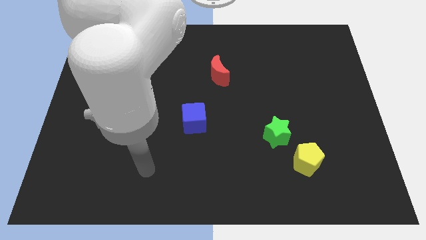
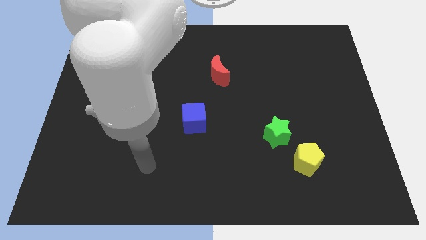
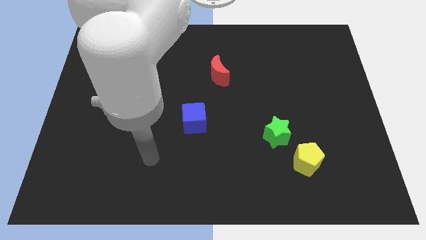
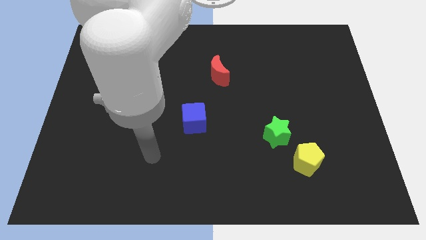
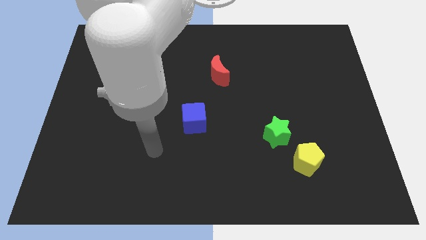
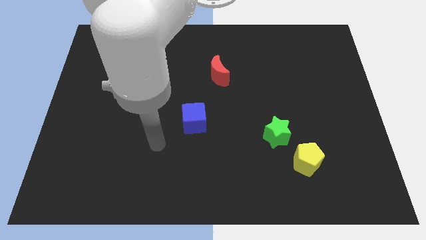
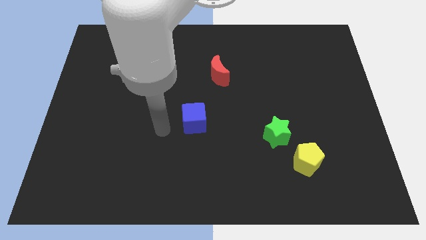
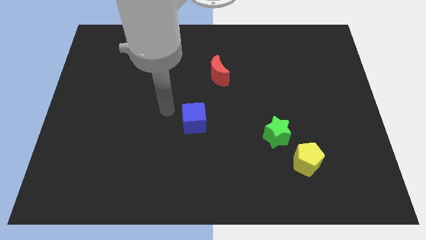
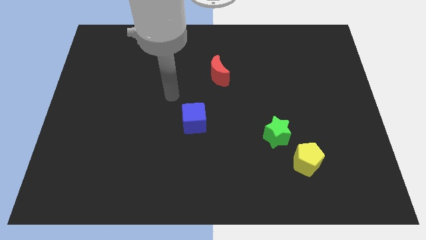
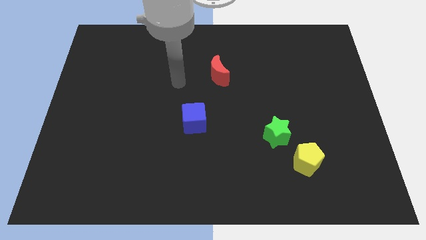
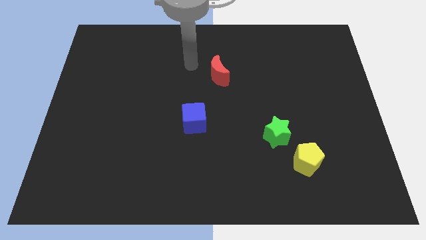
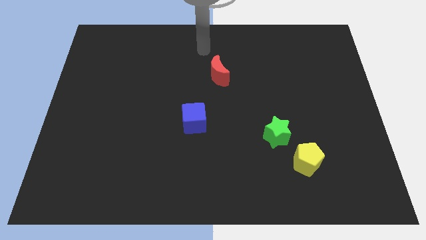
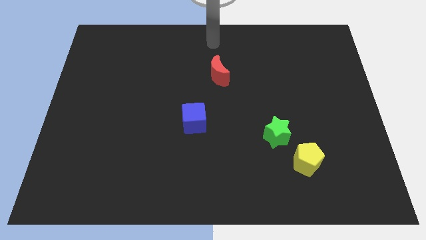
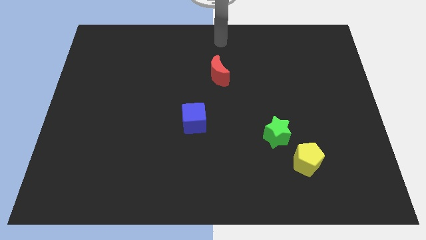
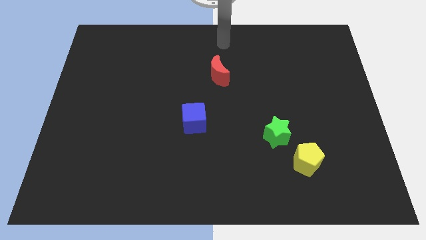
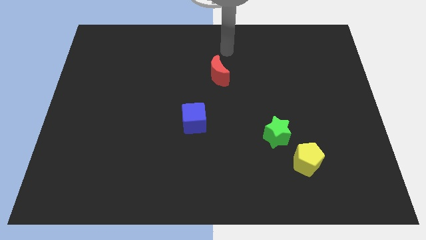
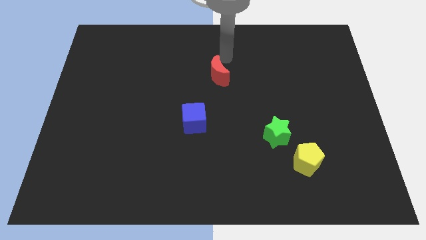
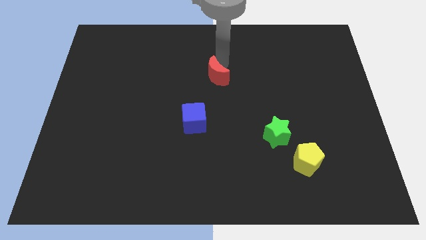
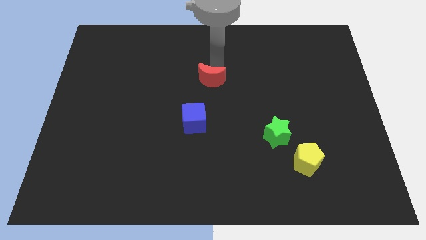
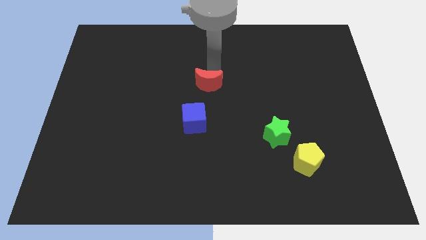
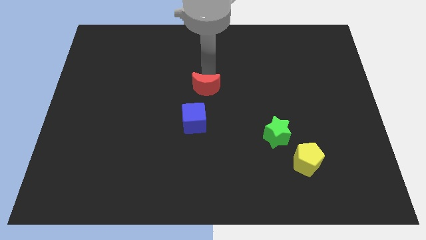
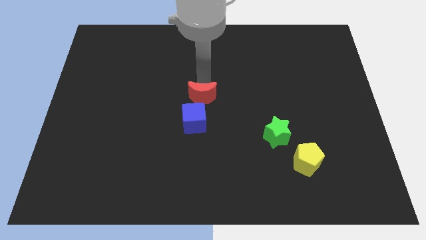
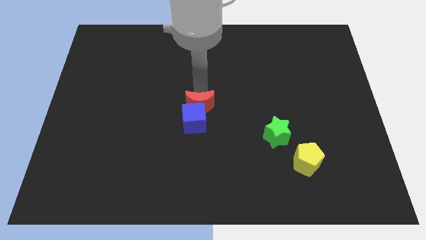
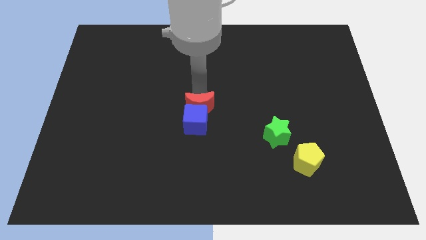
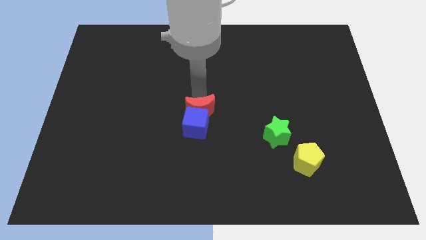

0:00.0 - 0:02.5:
slide the red moon next to the blue cube

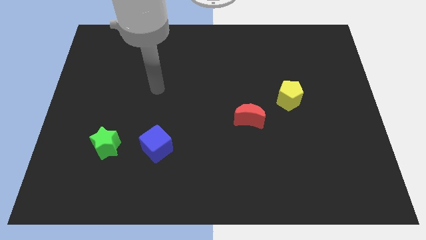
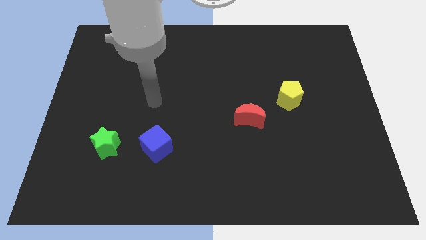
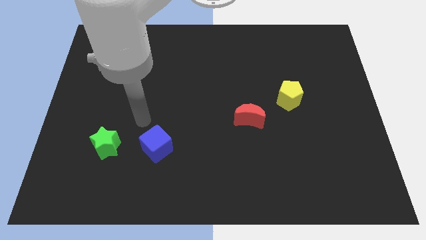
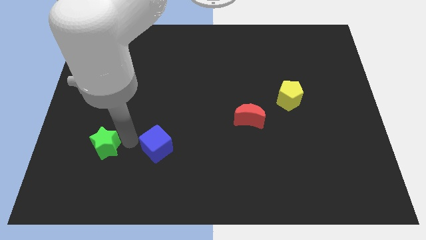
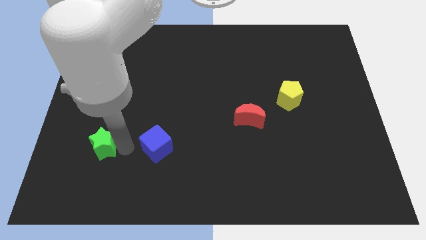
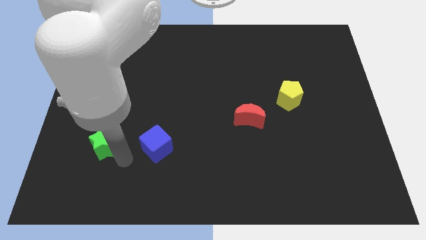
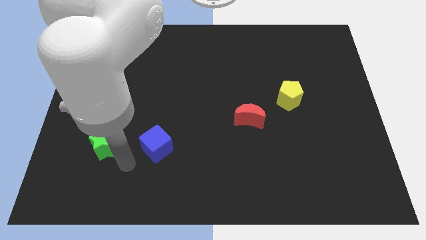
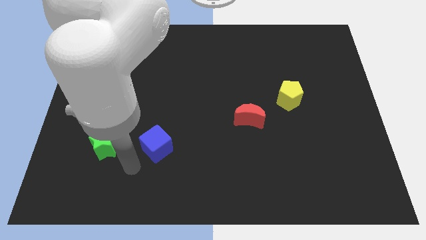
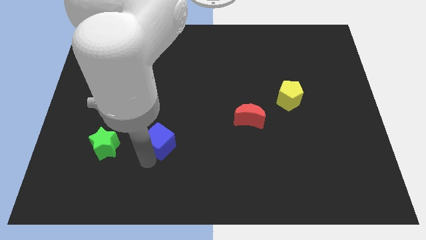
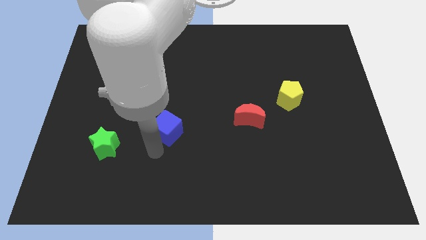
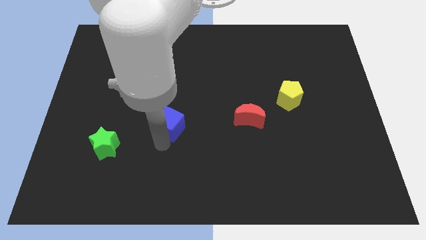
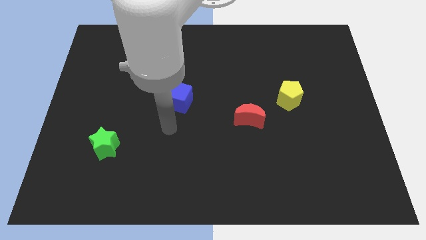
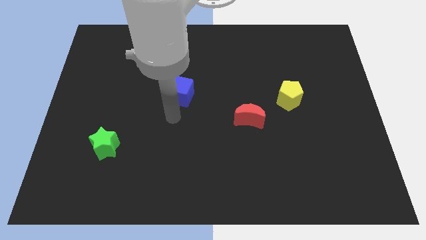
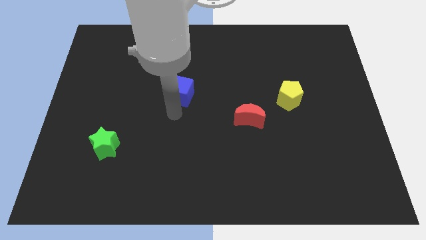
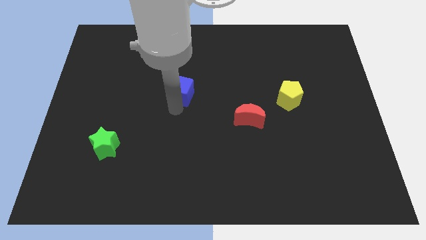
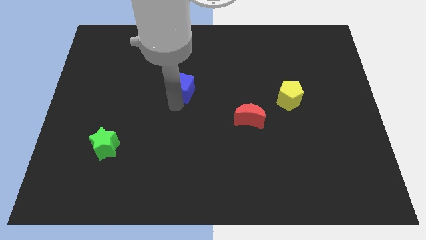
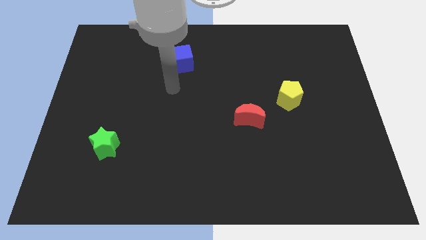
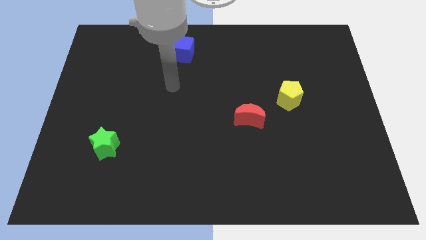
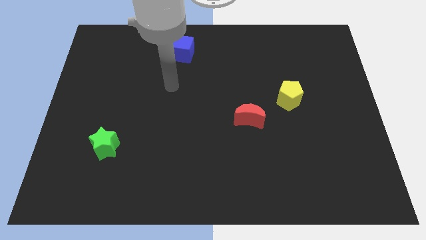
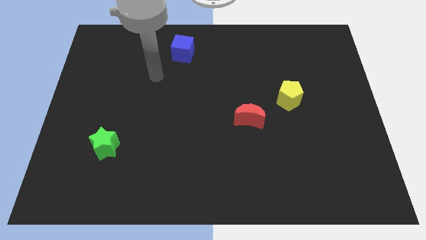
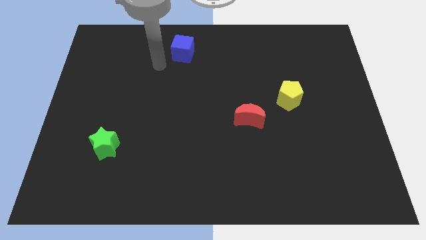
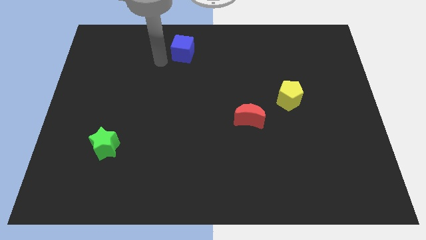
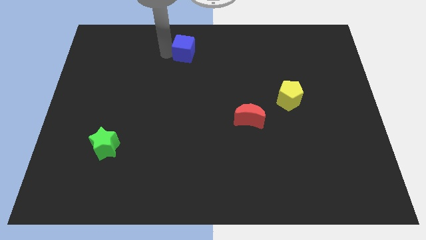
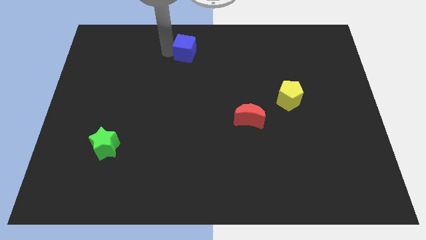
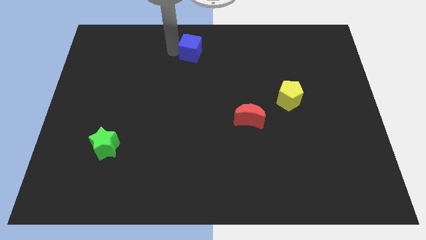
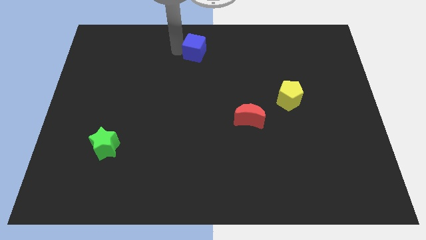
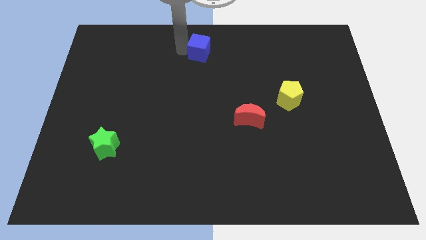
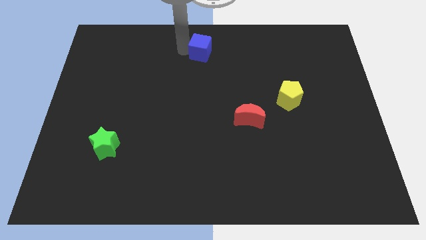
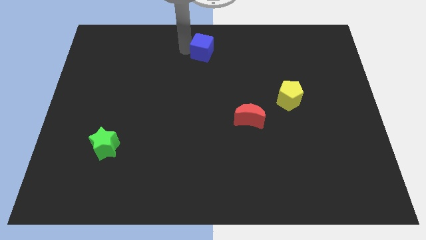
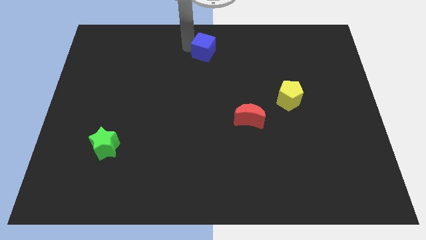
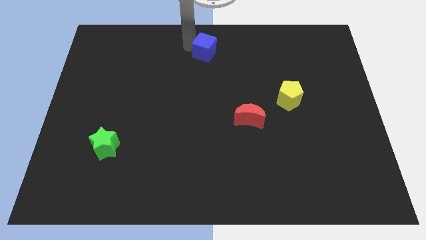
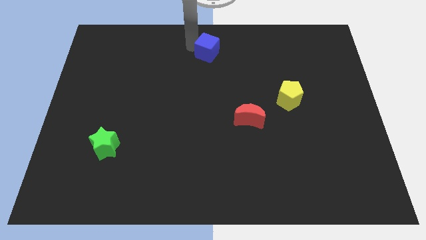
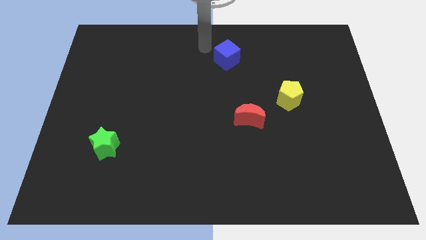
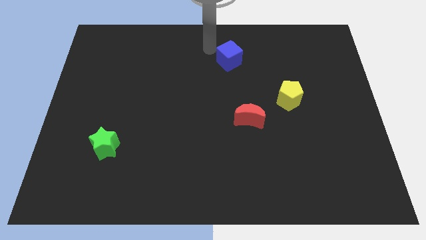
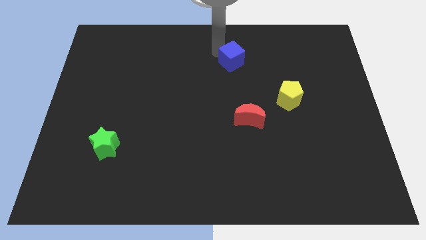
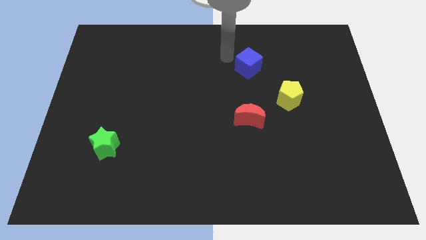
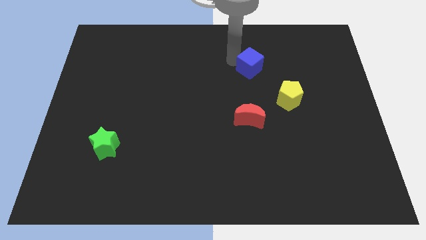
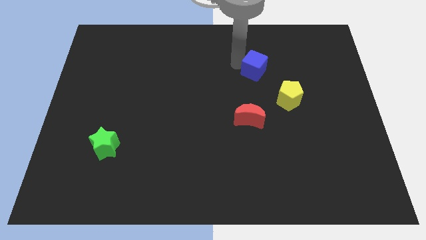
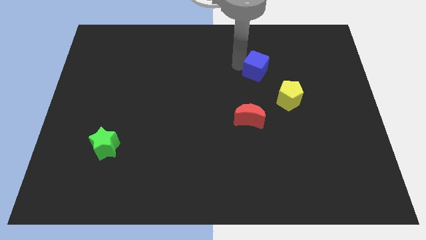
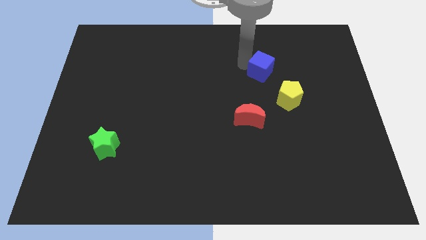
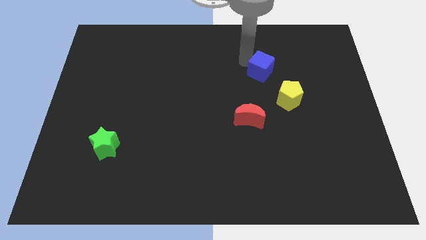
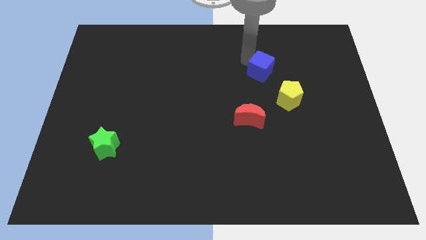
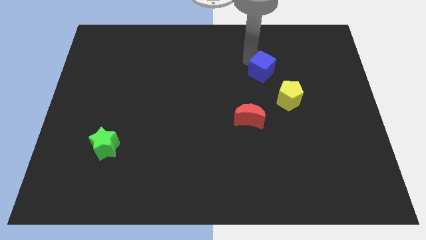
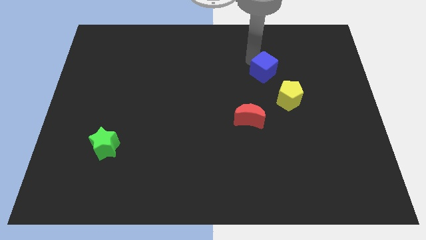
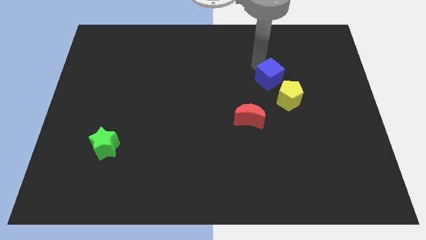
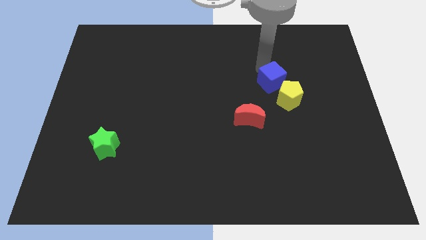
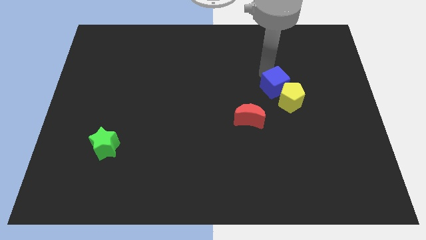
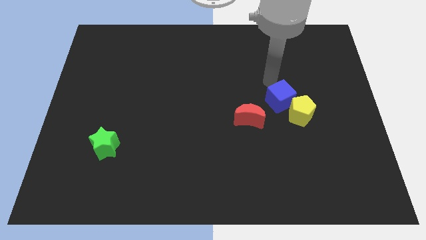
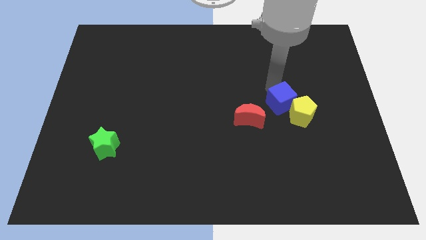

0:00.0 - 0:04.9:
put the cube close to the pentagon

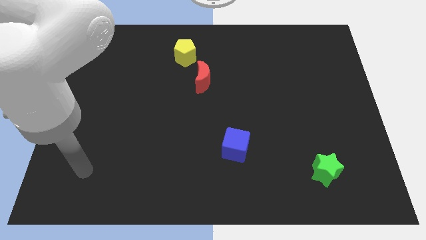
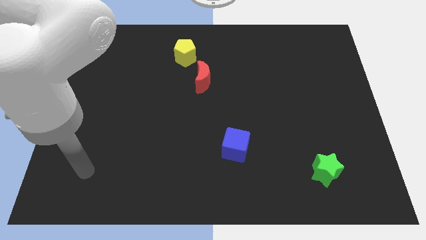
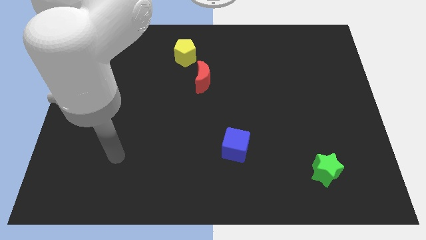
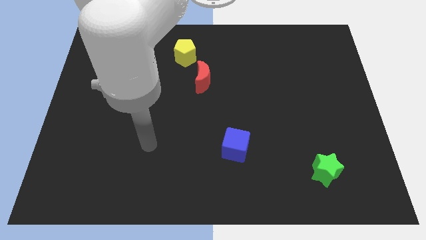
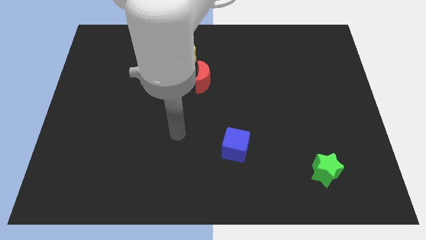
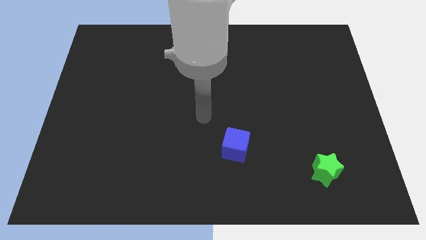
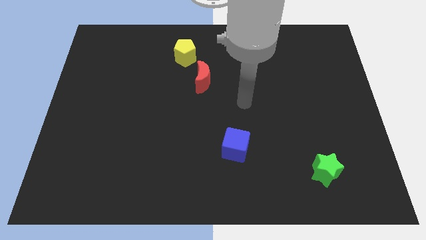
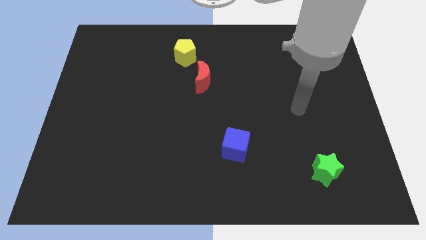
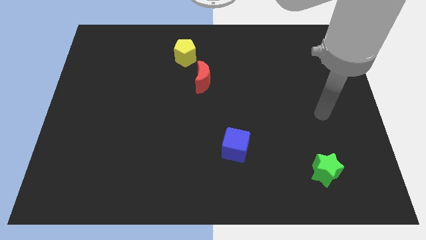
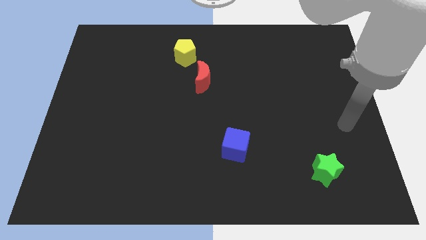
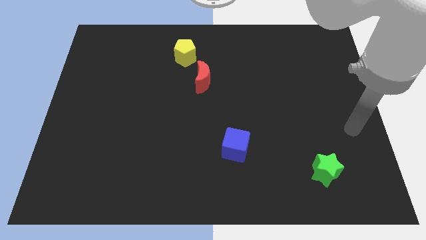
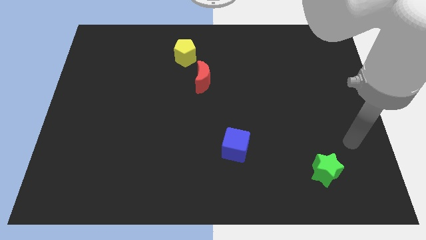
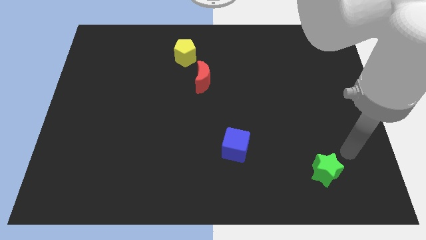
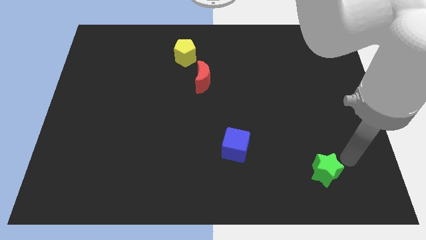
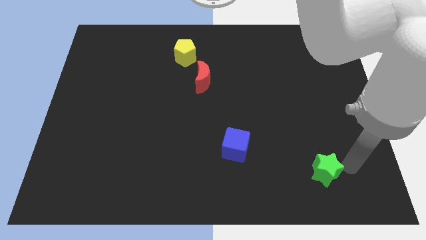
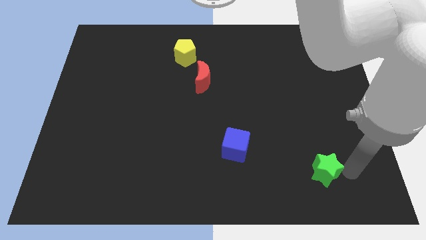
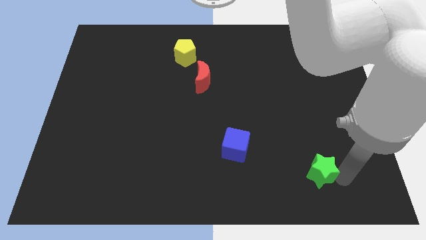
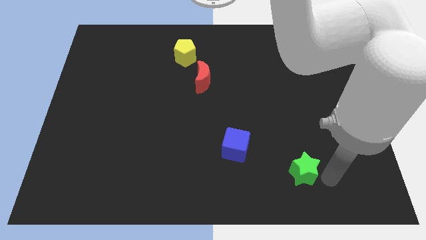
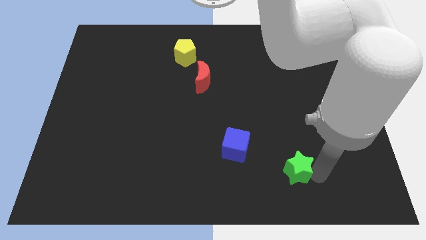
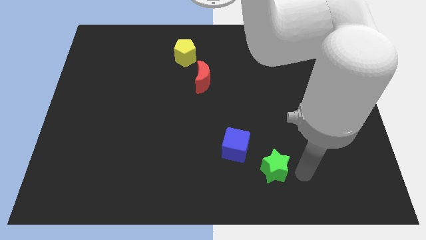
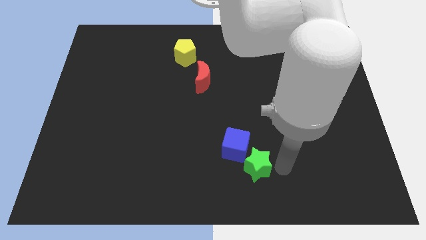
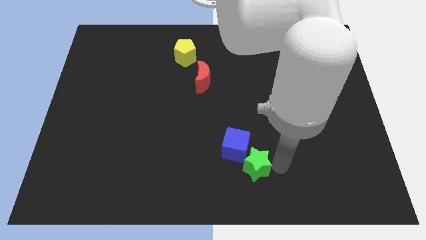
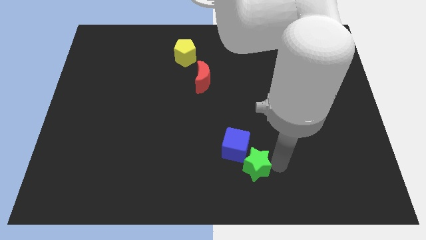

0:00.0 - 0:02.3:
push the green star next to the cube
